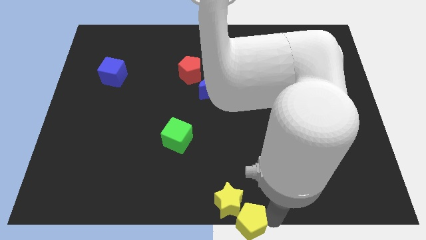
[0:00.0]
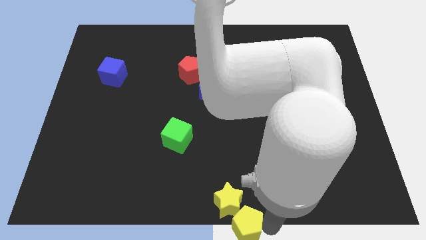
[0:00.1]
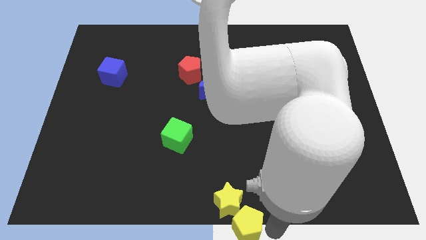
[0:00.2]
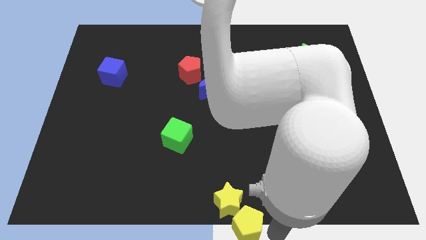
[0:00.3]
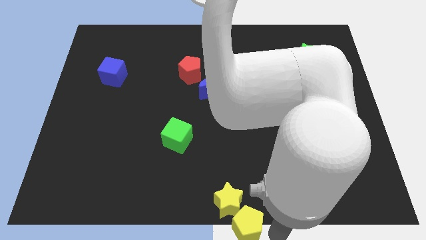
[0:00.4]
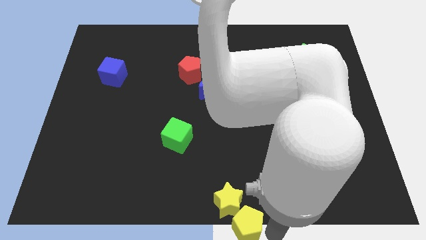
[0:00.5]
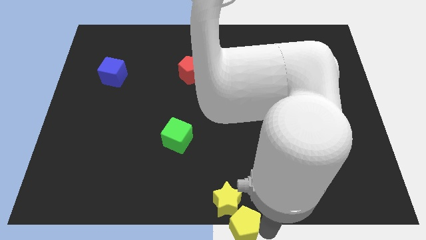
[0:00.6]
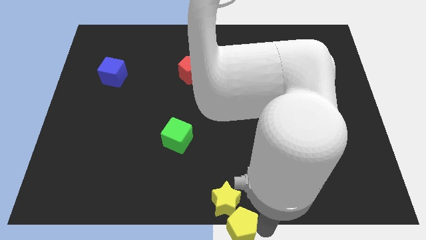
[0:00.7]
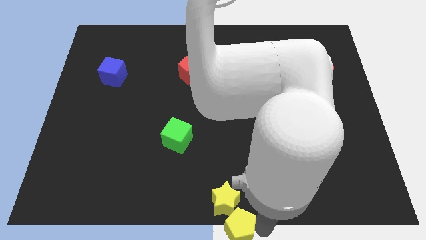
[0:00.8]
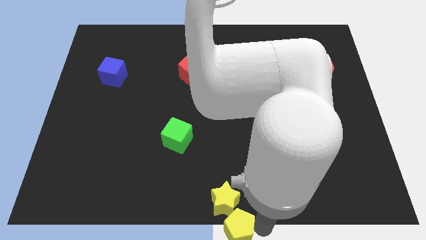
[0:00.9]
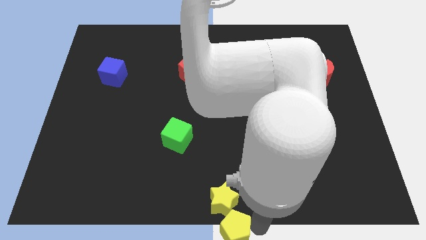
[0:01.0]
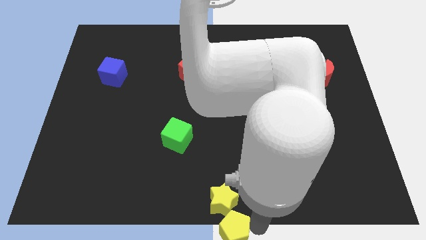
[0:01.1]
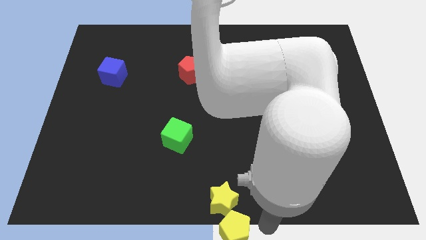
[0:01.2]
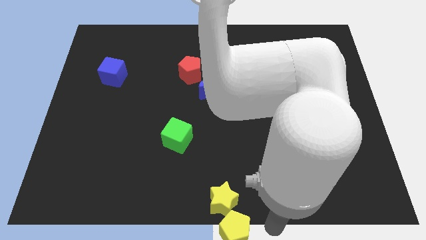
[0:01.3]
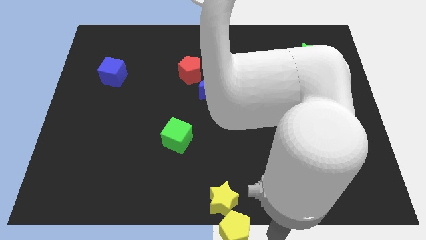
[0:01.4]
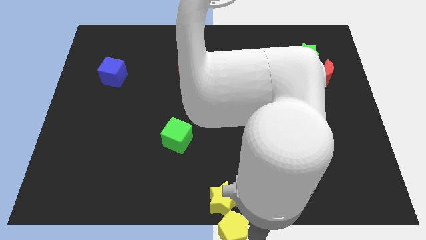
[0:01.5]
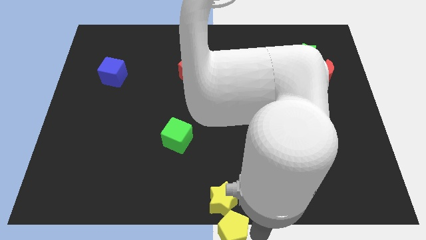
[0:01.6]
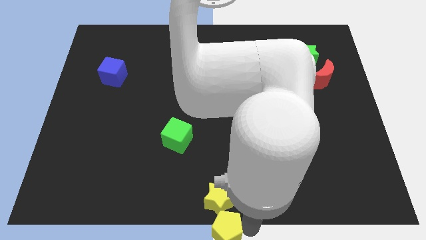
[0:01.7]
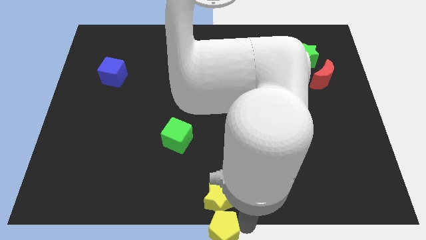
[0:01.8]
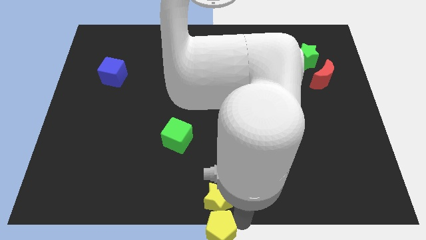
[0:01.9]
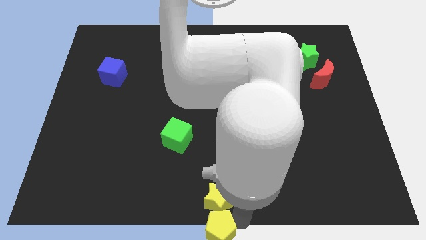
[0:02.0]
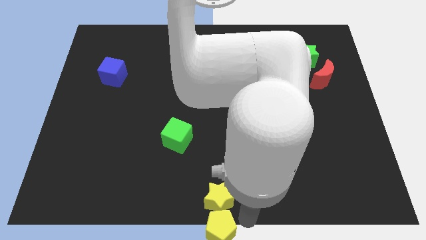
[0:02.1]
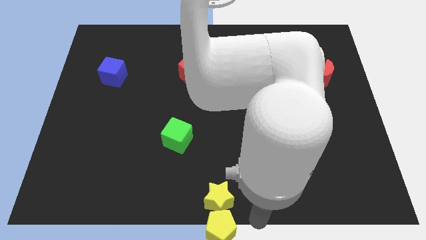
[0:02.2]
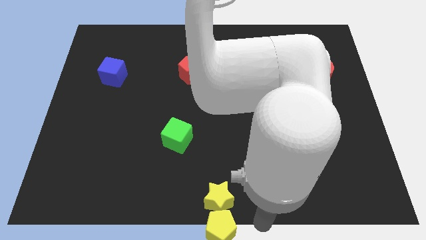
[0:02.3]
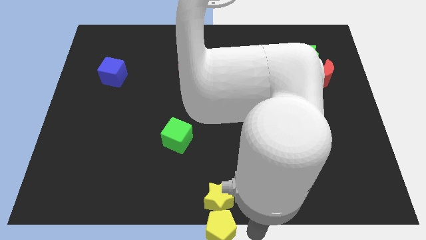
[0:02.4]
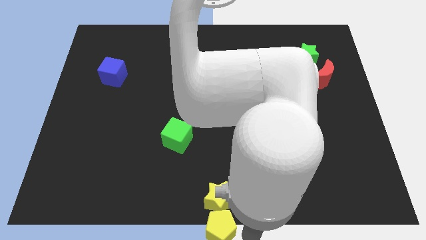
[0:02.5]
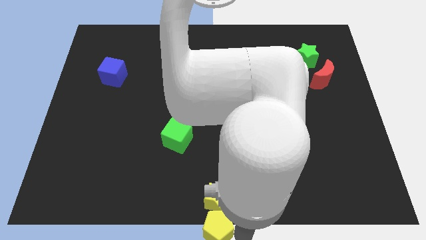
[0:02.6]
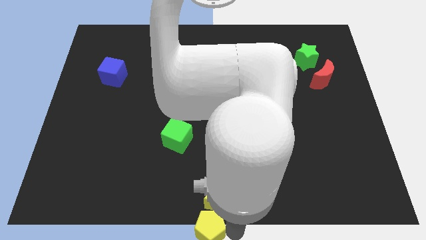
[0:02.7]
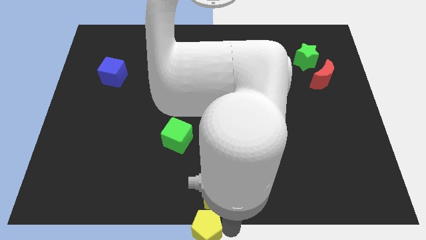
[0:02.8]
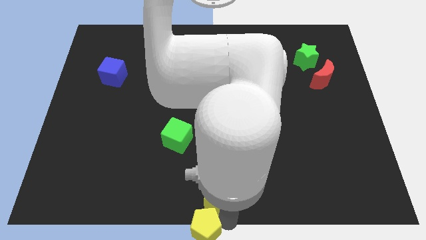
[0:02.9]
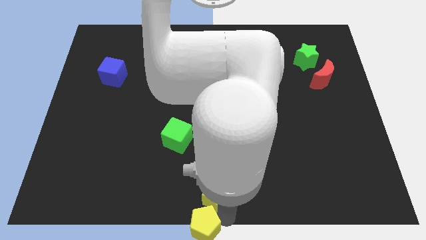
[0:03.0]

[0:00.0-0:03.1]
place yellow pentagon below the yellow star

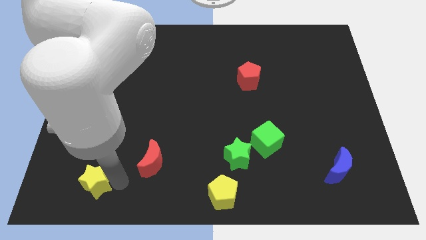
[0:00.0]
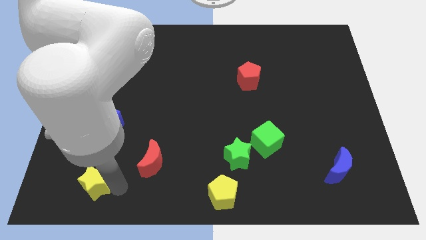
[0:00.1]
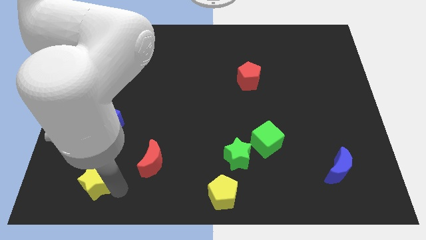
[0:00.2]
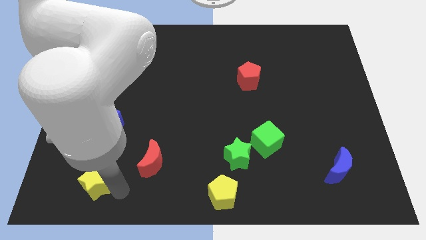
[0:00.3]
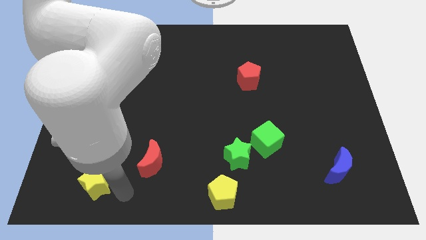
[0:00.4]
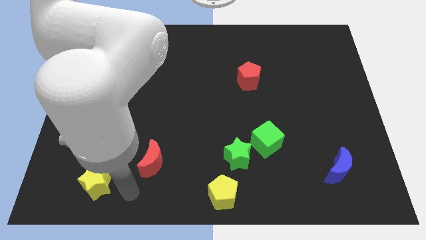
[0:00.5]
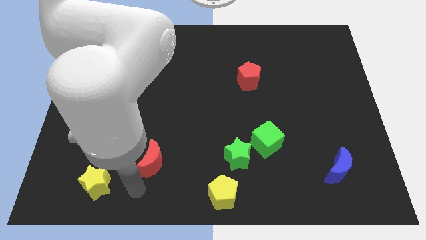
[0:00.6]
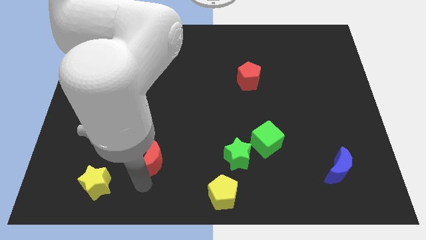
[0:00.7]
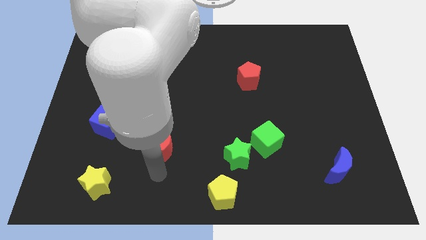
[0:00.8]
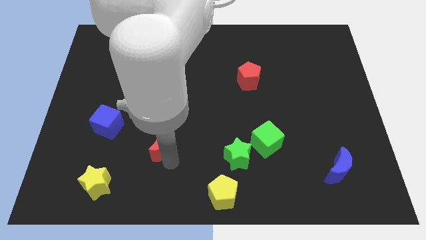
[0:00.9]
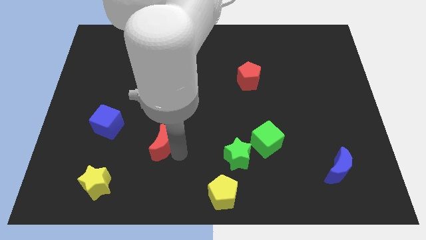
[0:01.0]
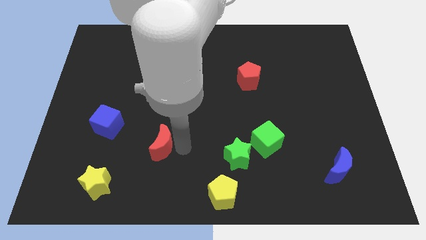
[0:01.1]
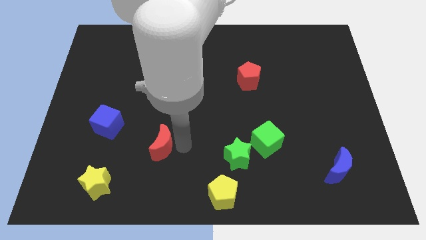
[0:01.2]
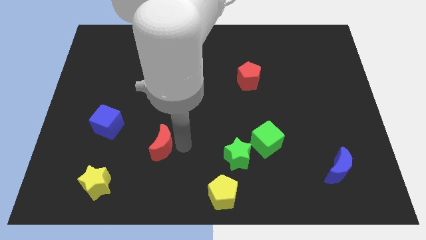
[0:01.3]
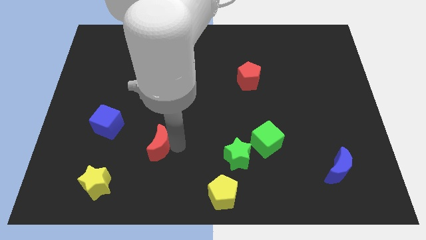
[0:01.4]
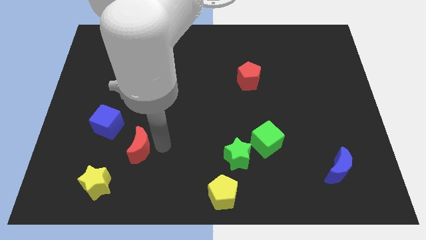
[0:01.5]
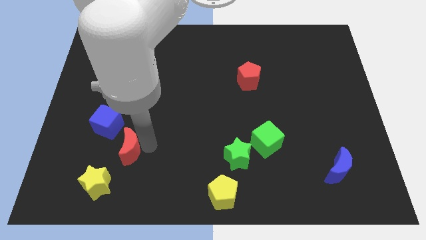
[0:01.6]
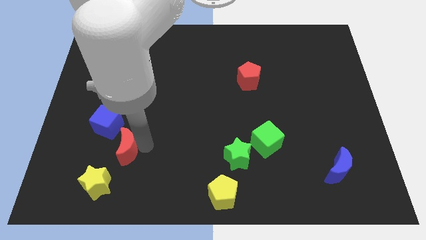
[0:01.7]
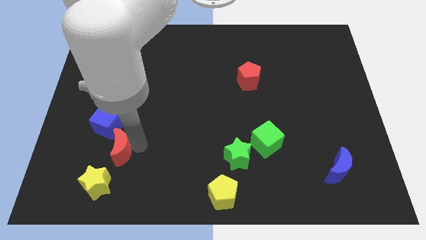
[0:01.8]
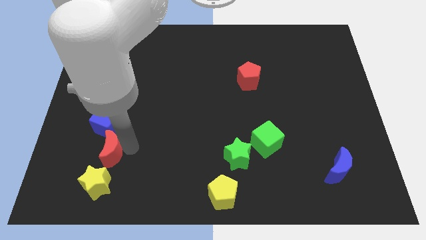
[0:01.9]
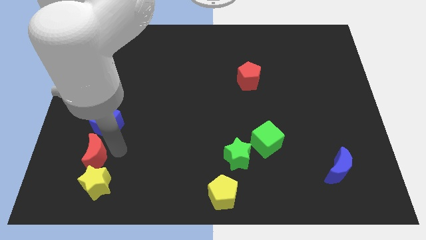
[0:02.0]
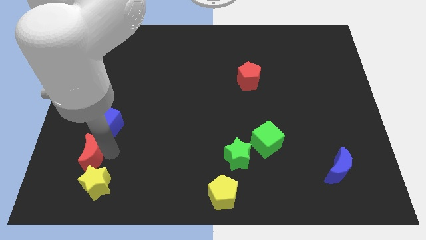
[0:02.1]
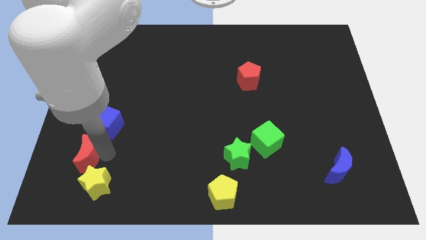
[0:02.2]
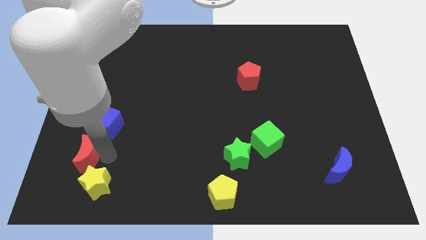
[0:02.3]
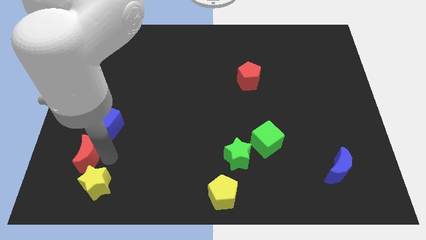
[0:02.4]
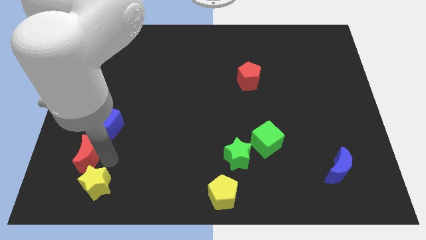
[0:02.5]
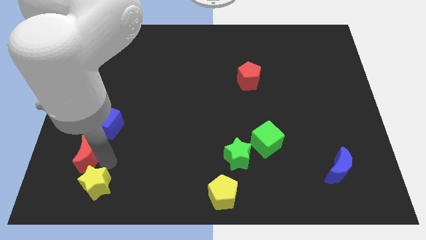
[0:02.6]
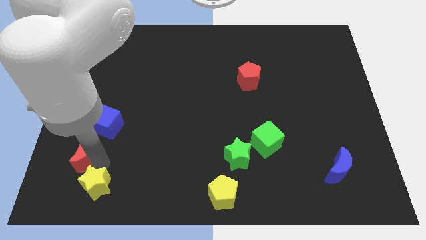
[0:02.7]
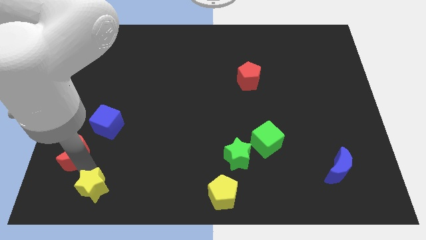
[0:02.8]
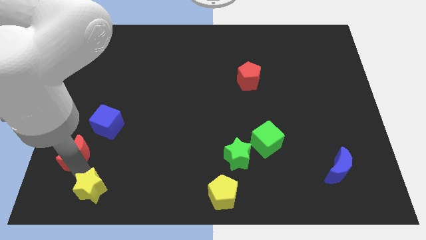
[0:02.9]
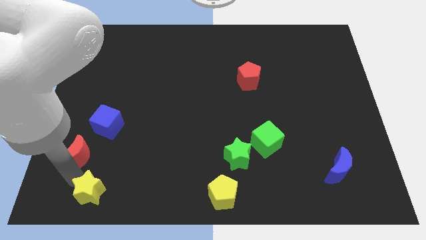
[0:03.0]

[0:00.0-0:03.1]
slide the red crescent slightly to the left

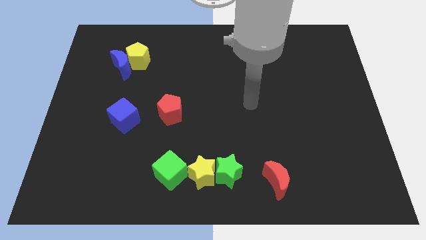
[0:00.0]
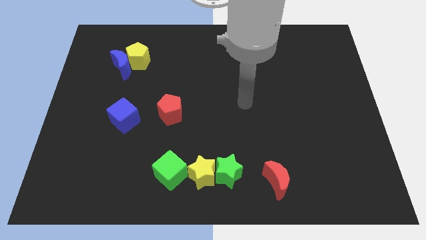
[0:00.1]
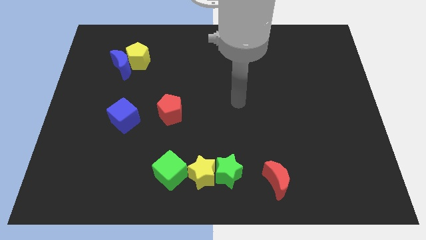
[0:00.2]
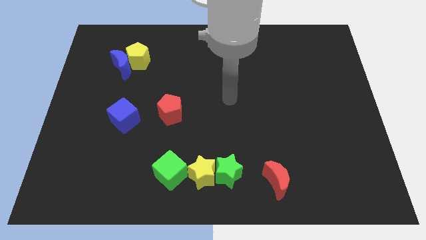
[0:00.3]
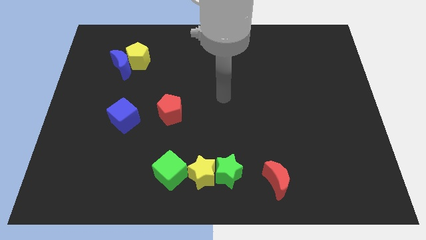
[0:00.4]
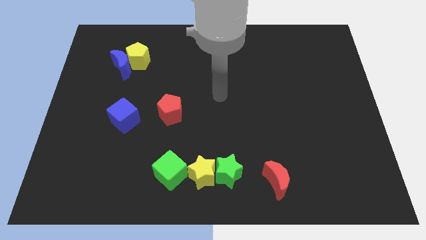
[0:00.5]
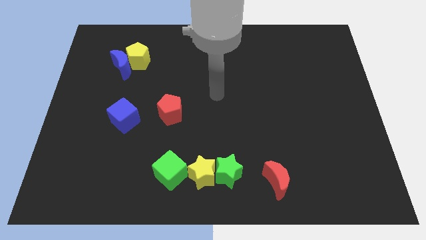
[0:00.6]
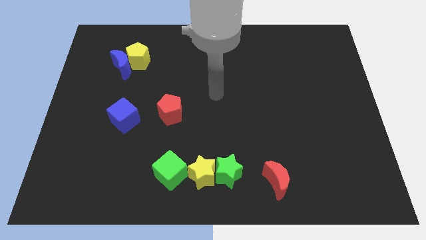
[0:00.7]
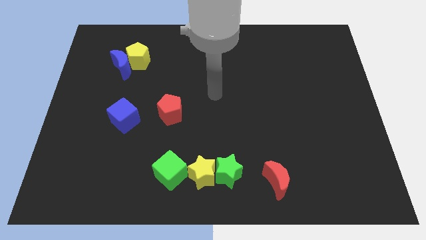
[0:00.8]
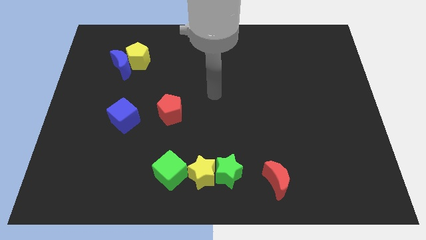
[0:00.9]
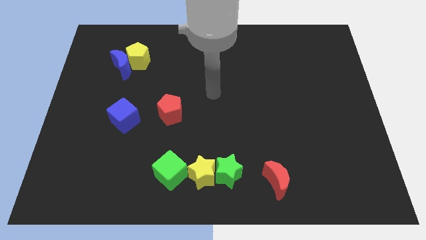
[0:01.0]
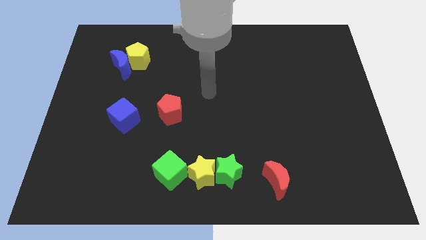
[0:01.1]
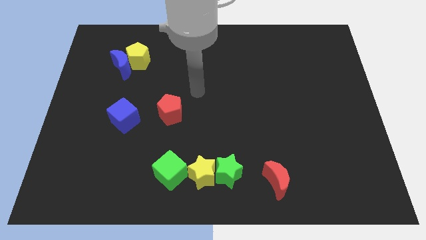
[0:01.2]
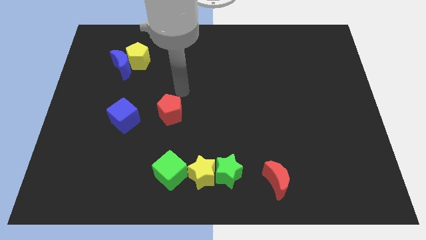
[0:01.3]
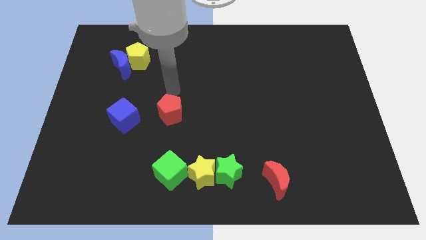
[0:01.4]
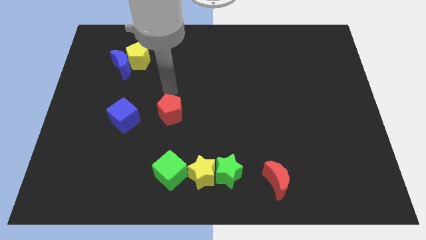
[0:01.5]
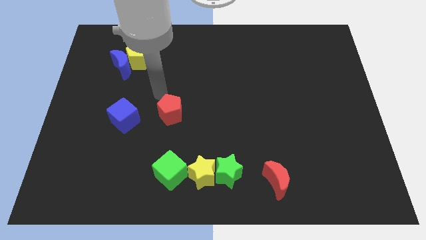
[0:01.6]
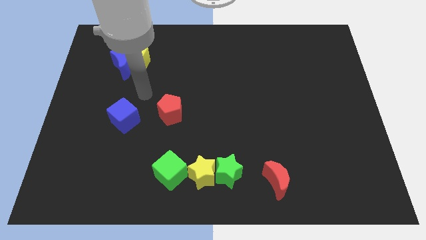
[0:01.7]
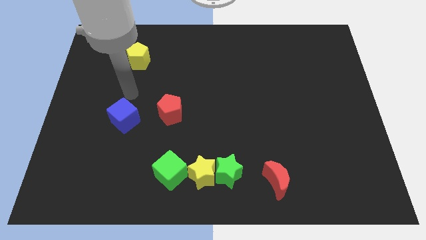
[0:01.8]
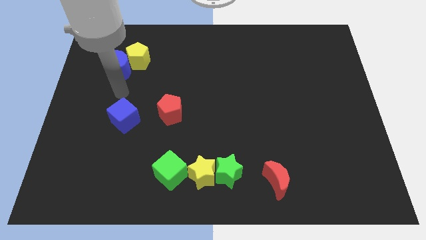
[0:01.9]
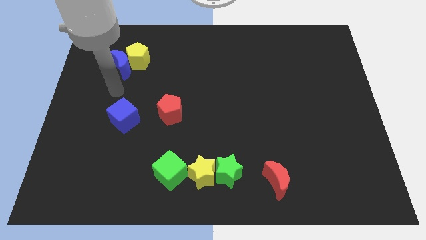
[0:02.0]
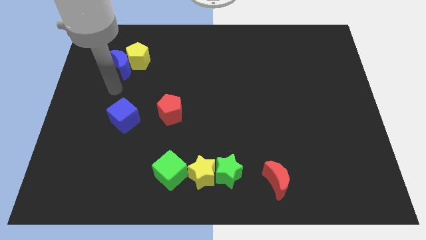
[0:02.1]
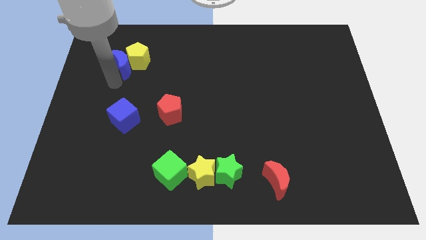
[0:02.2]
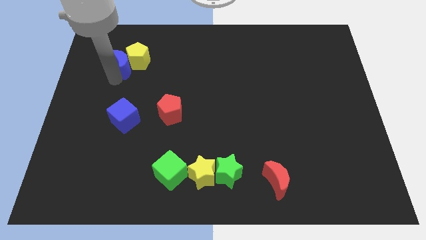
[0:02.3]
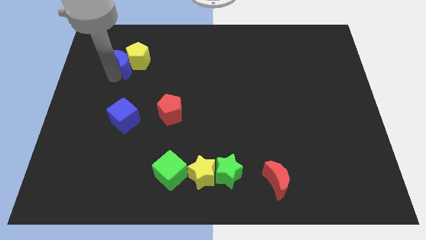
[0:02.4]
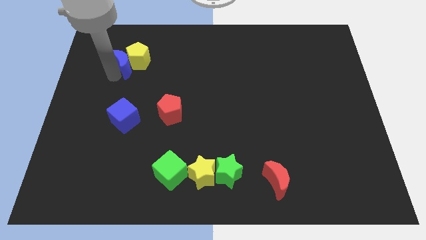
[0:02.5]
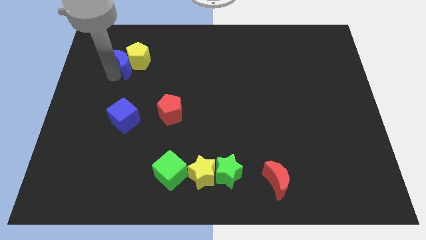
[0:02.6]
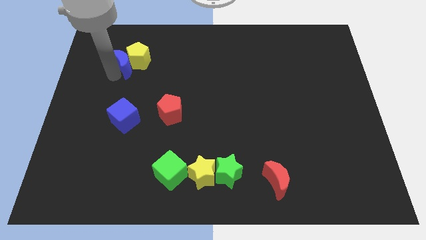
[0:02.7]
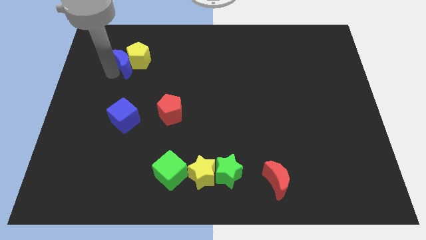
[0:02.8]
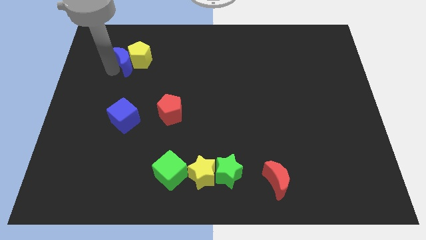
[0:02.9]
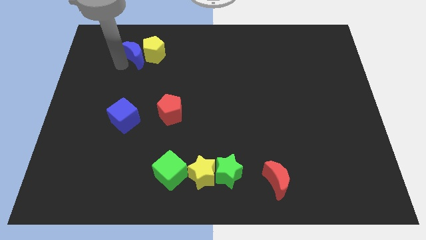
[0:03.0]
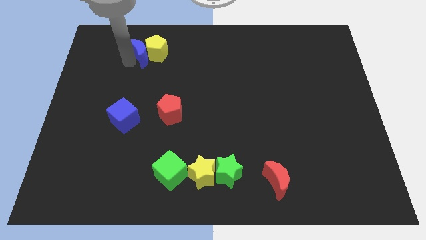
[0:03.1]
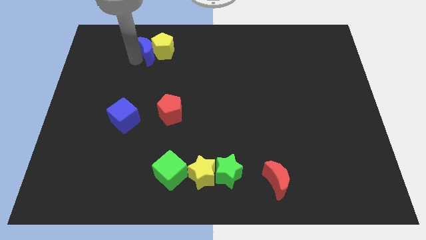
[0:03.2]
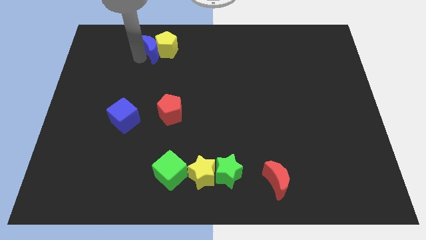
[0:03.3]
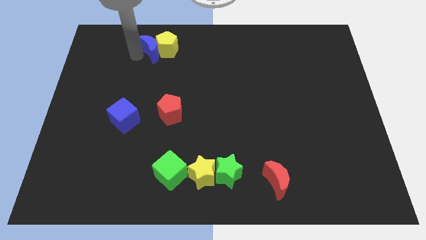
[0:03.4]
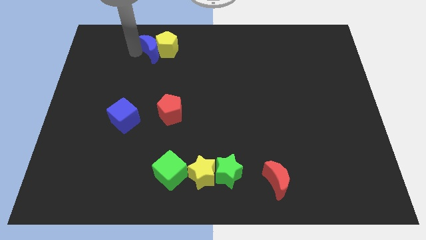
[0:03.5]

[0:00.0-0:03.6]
slightly push the yellow pentagon with the blue moon to the top middle of the board
